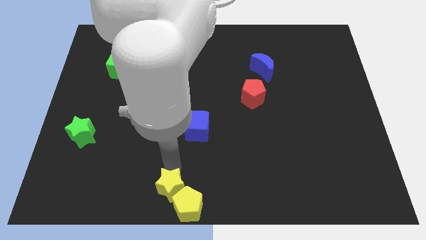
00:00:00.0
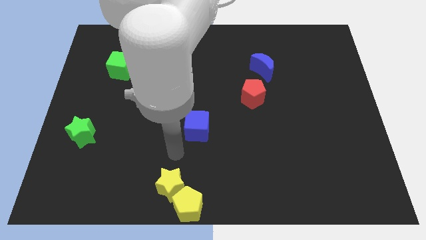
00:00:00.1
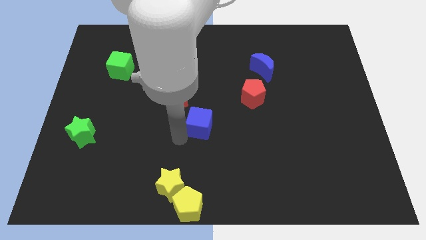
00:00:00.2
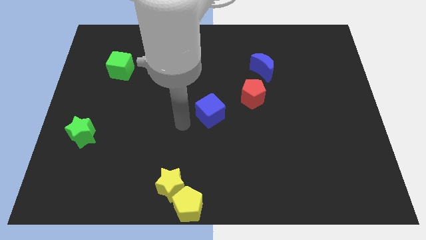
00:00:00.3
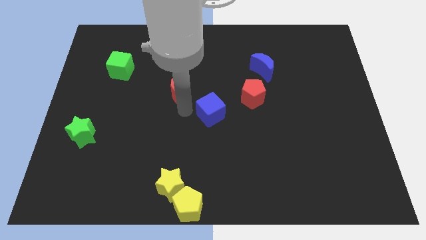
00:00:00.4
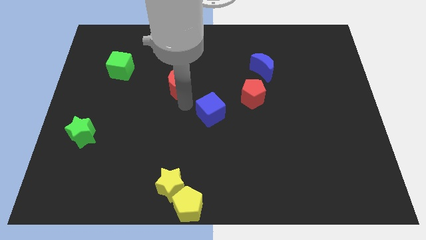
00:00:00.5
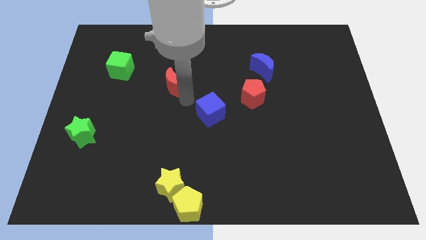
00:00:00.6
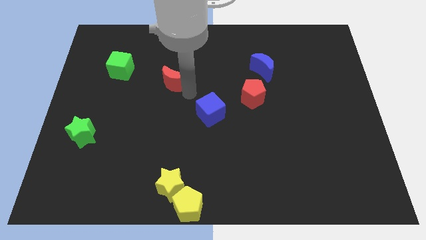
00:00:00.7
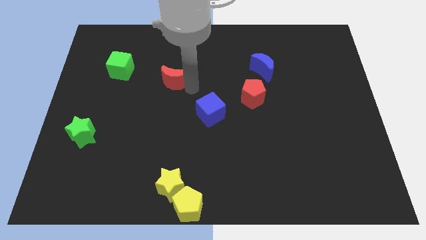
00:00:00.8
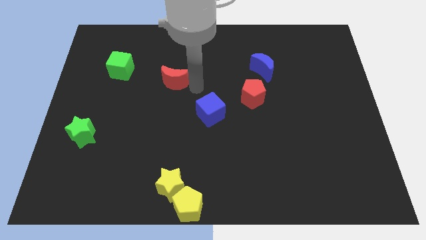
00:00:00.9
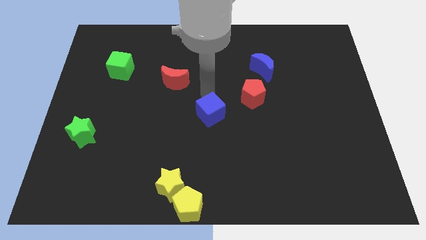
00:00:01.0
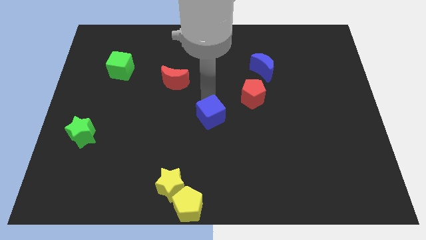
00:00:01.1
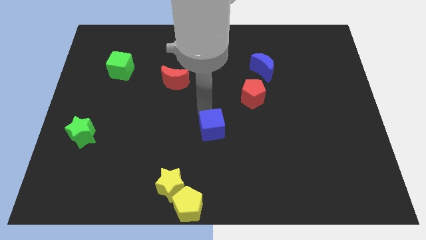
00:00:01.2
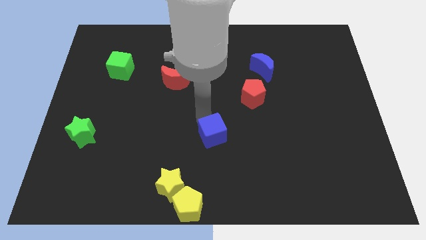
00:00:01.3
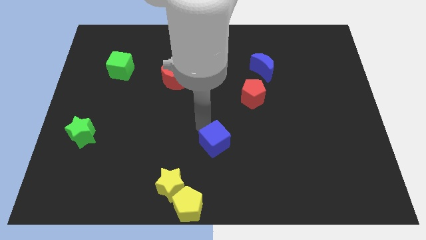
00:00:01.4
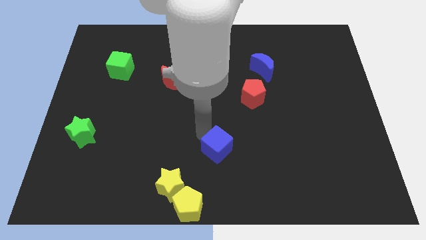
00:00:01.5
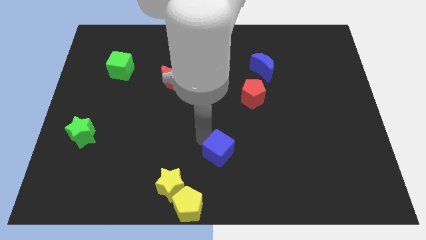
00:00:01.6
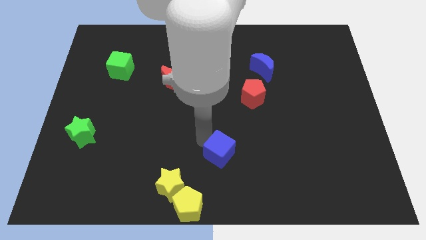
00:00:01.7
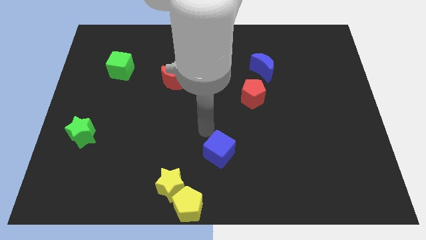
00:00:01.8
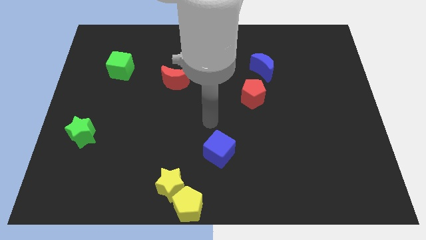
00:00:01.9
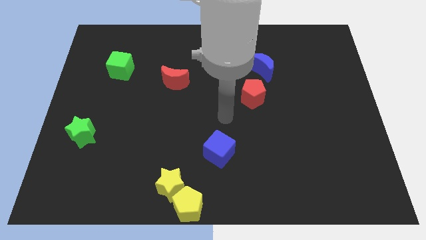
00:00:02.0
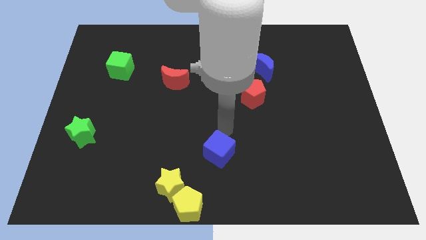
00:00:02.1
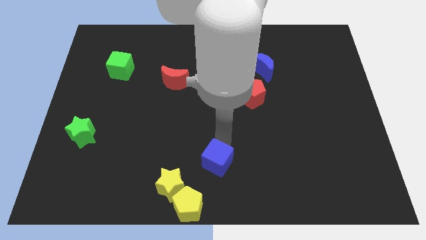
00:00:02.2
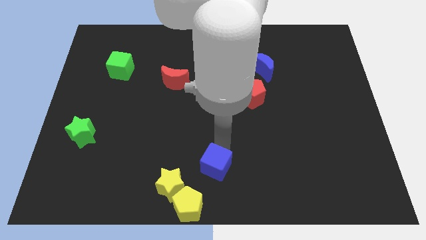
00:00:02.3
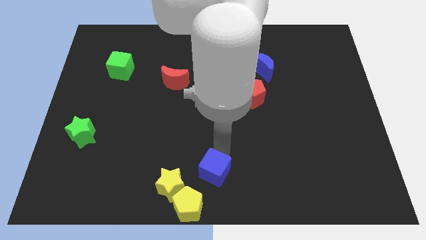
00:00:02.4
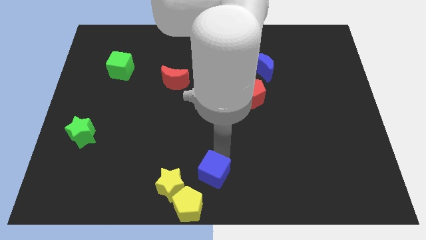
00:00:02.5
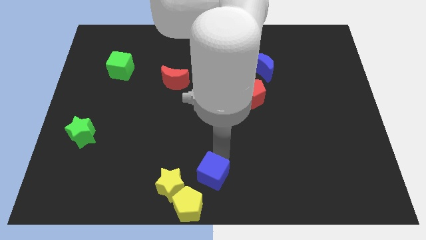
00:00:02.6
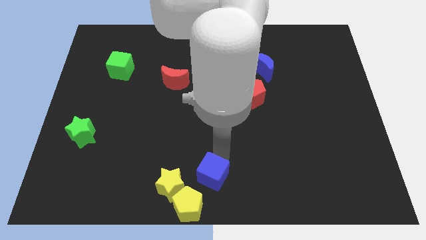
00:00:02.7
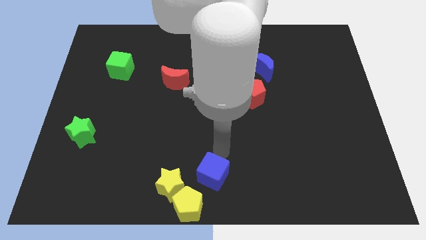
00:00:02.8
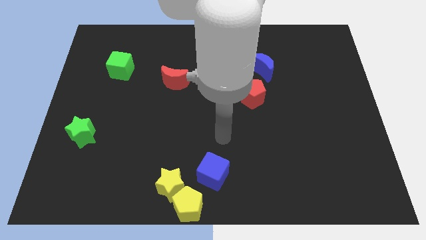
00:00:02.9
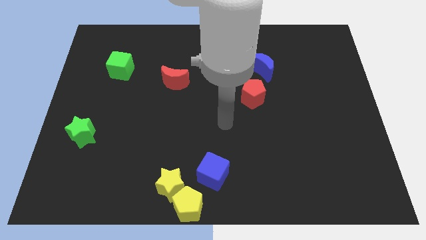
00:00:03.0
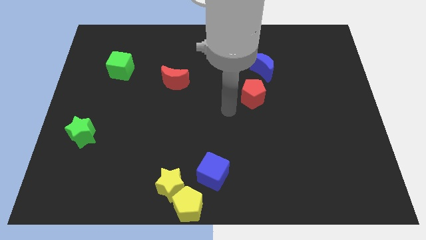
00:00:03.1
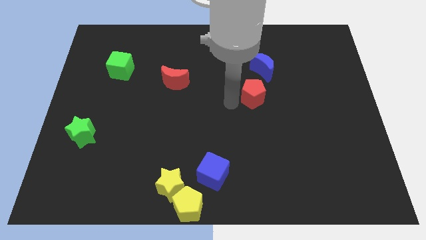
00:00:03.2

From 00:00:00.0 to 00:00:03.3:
push the blue cube to the right of the yellow star

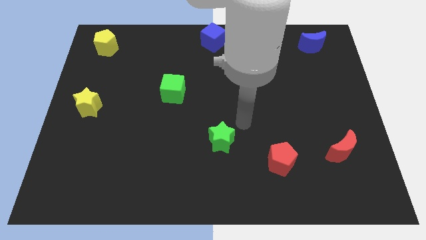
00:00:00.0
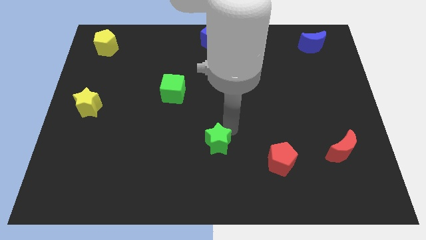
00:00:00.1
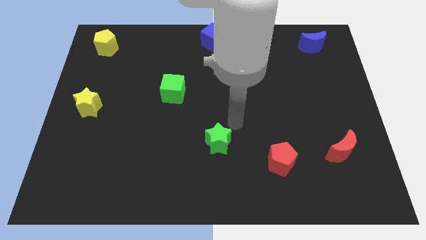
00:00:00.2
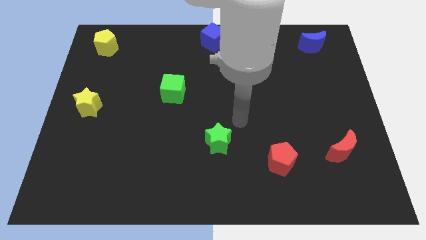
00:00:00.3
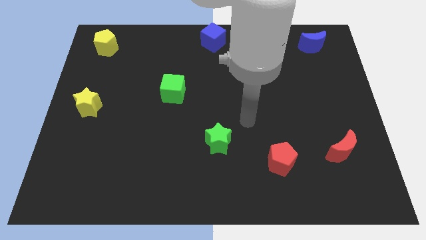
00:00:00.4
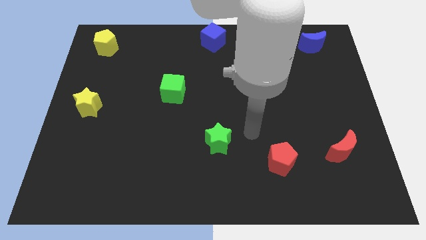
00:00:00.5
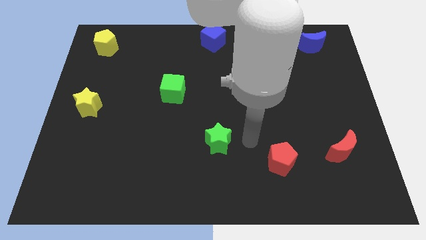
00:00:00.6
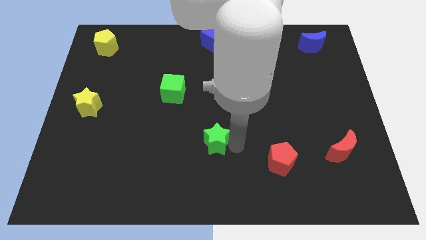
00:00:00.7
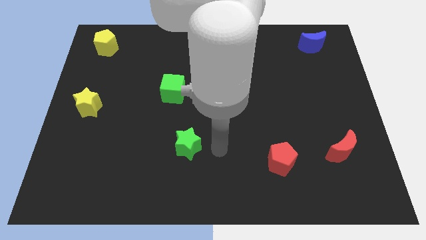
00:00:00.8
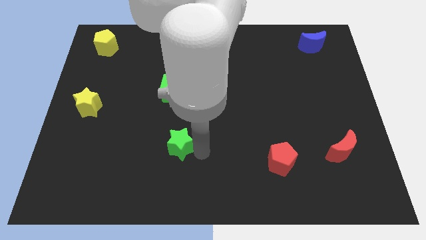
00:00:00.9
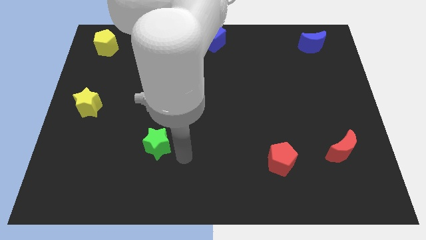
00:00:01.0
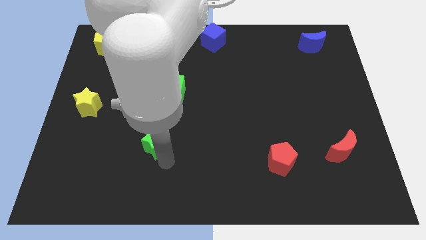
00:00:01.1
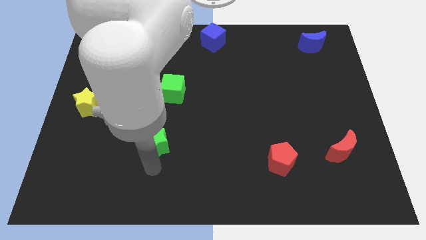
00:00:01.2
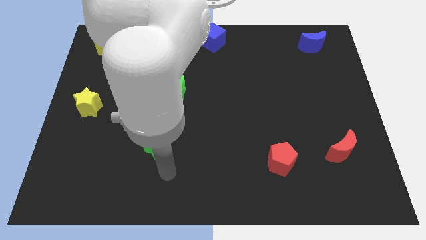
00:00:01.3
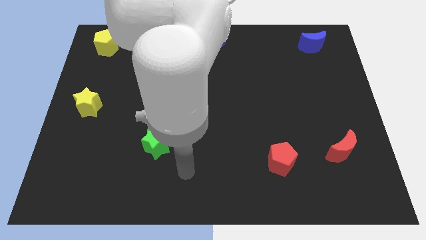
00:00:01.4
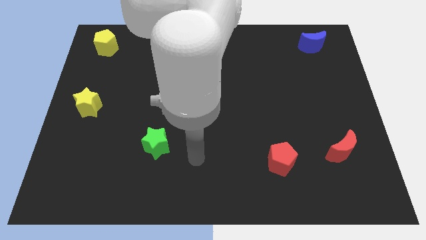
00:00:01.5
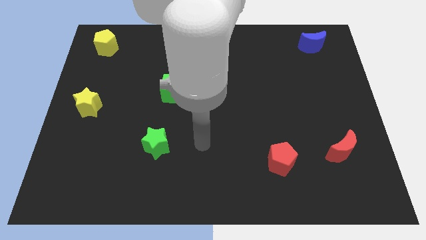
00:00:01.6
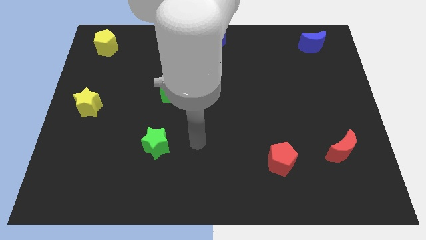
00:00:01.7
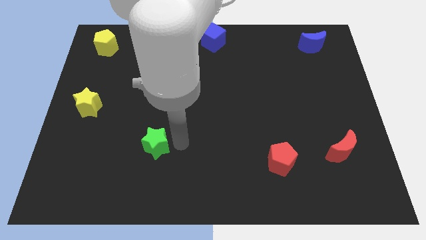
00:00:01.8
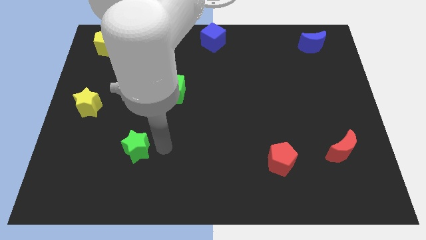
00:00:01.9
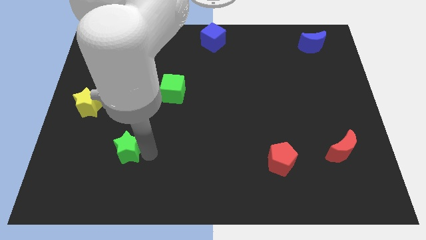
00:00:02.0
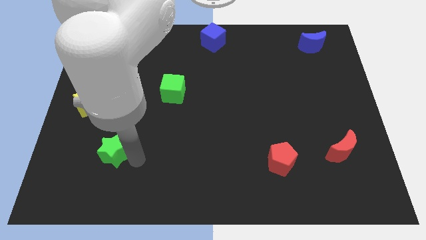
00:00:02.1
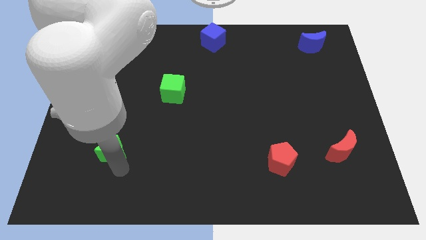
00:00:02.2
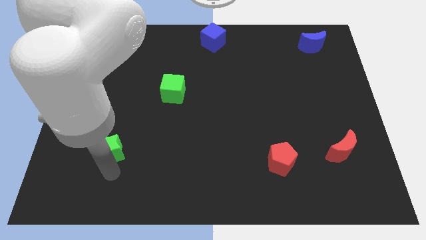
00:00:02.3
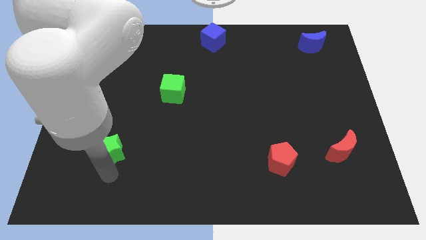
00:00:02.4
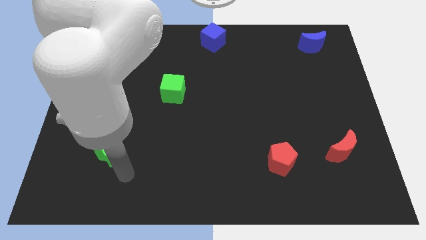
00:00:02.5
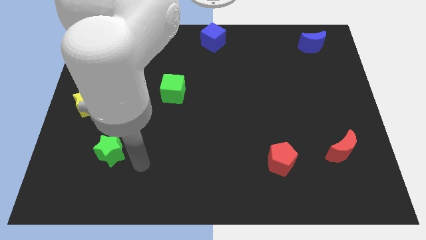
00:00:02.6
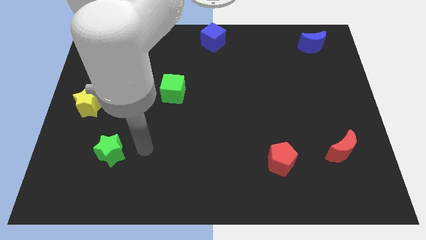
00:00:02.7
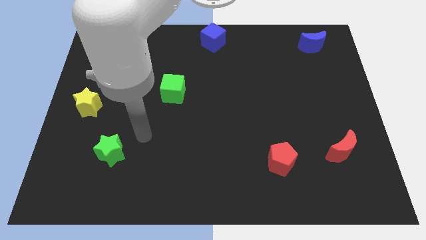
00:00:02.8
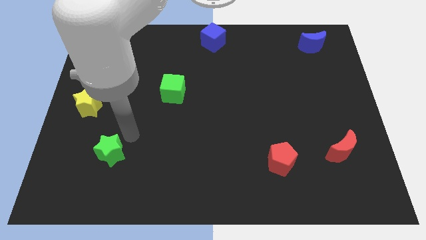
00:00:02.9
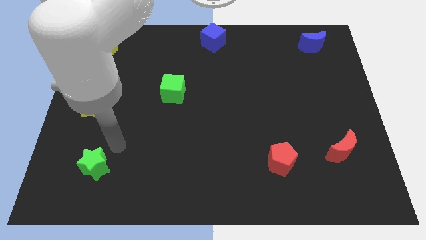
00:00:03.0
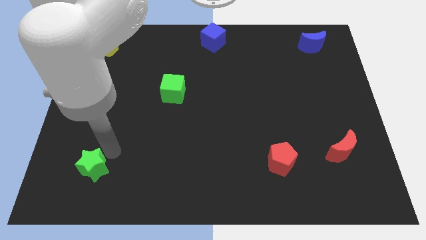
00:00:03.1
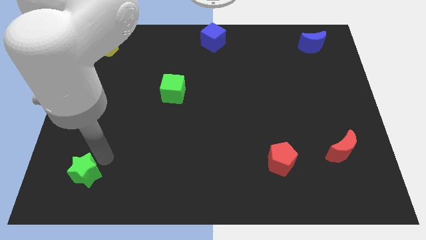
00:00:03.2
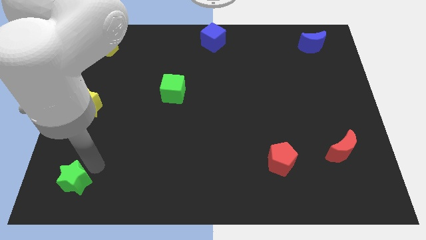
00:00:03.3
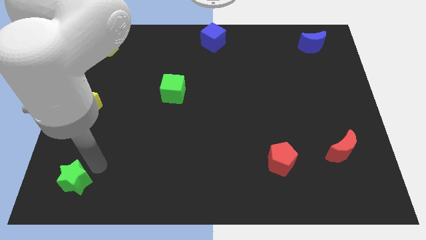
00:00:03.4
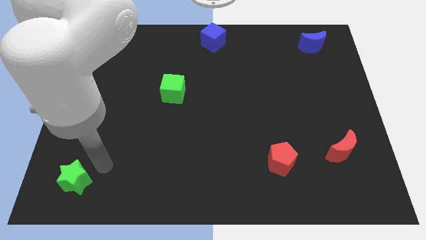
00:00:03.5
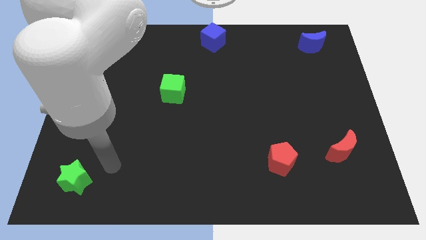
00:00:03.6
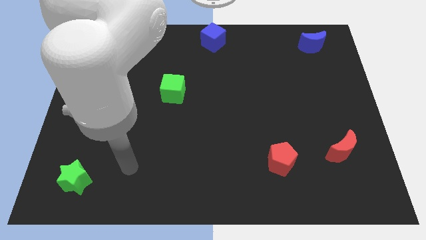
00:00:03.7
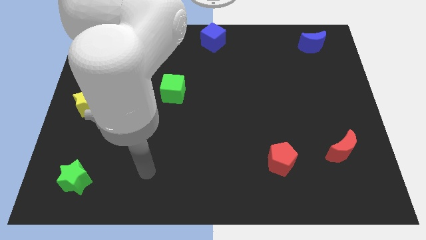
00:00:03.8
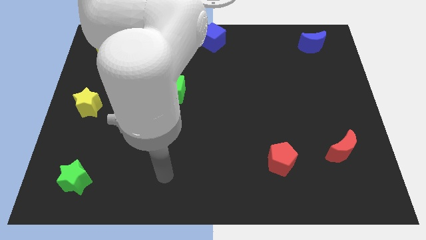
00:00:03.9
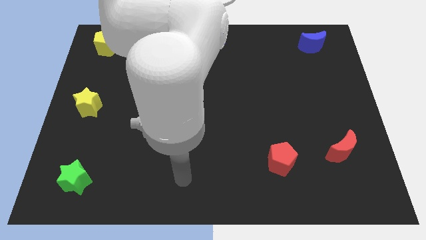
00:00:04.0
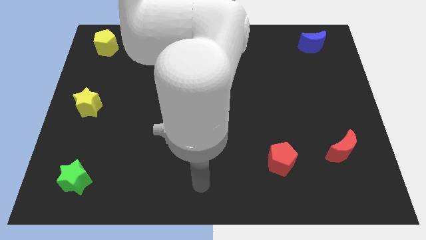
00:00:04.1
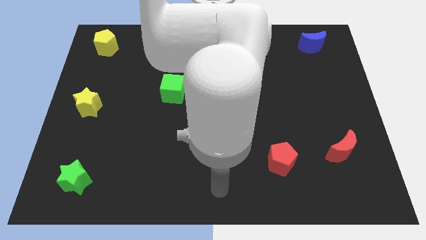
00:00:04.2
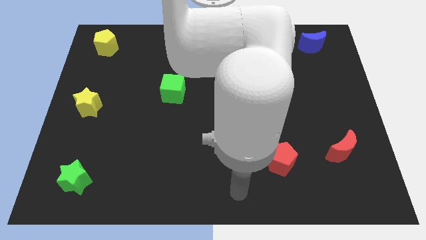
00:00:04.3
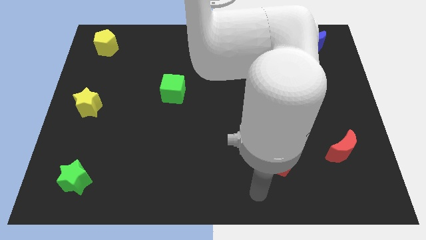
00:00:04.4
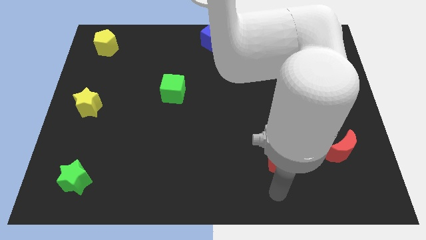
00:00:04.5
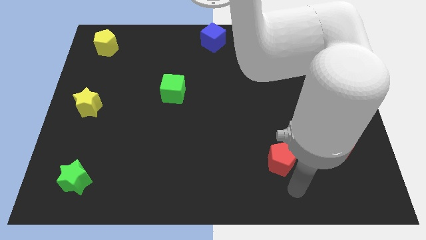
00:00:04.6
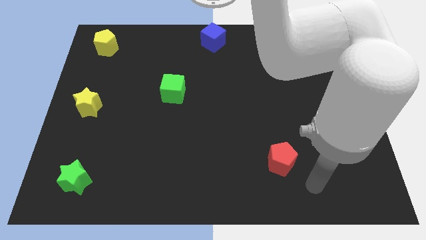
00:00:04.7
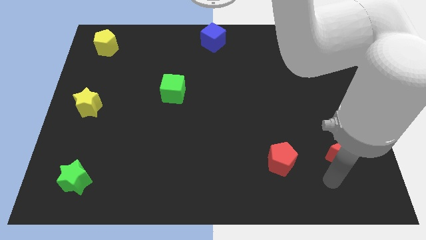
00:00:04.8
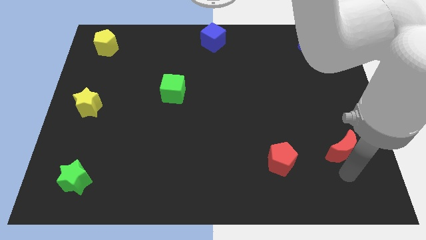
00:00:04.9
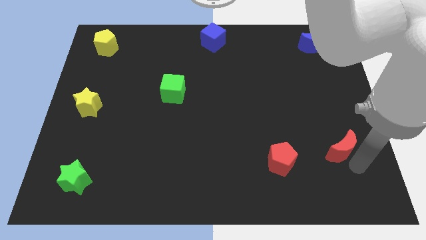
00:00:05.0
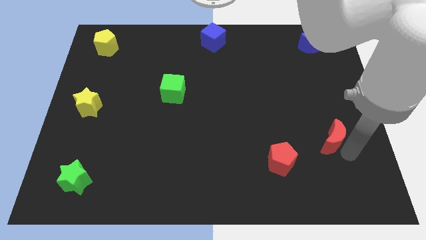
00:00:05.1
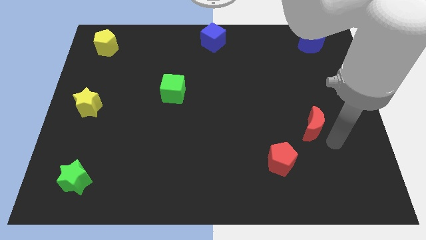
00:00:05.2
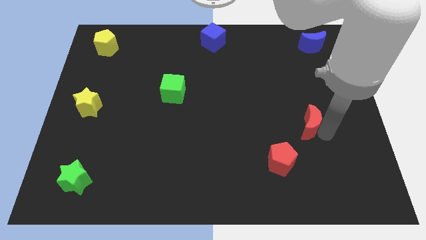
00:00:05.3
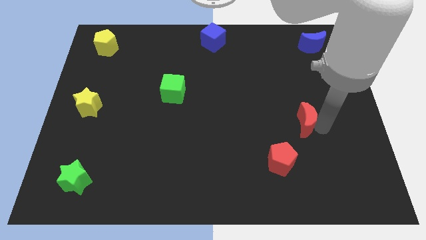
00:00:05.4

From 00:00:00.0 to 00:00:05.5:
push green star to the bottom left side of the board

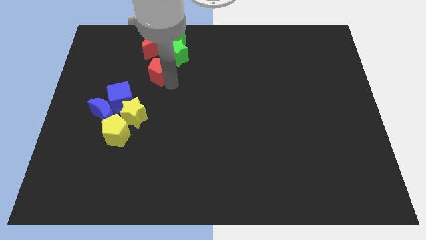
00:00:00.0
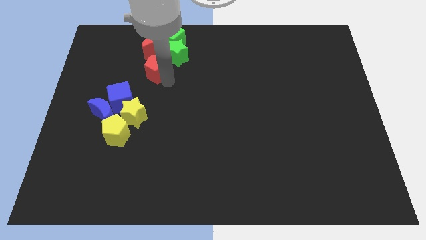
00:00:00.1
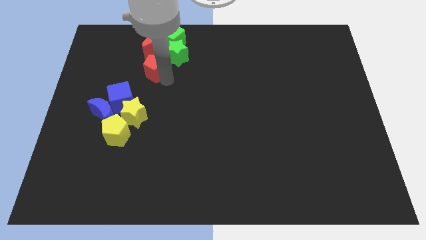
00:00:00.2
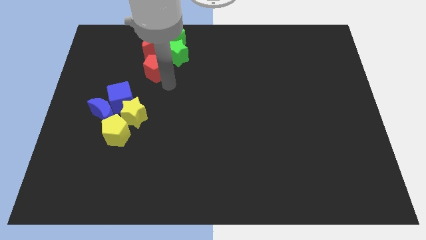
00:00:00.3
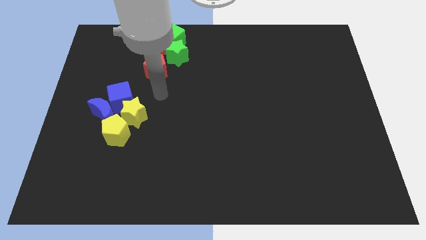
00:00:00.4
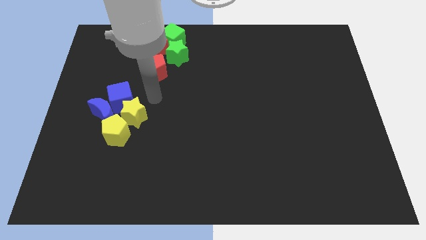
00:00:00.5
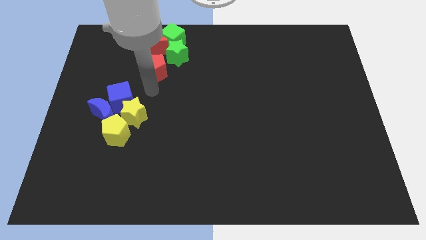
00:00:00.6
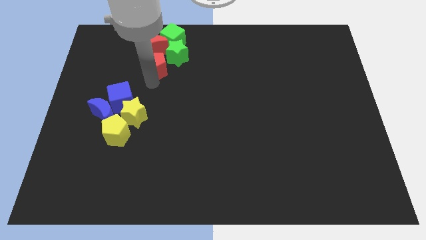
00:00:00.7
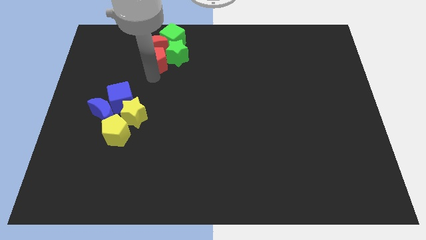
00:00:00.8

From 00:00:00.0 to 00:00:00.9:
place red pentagon below red crescent
